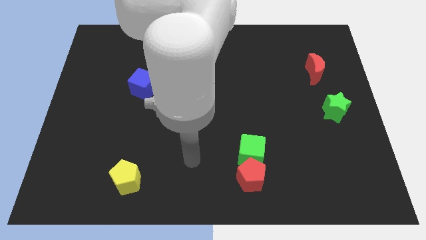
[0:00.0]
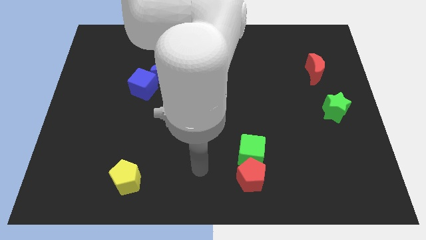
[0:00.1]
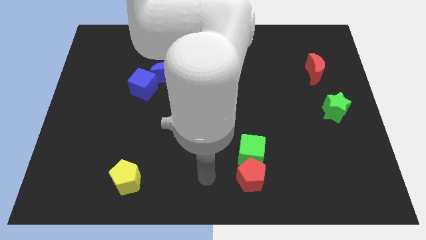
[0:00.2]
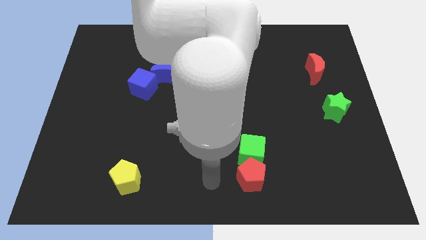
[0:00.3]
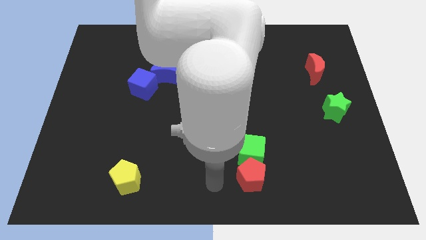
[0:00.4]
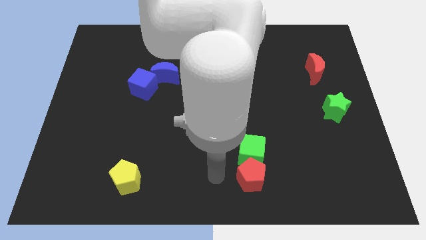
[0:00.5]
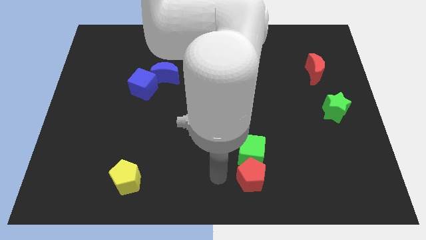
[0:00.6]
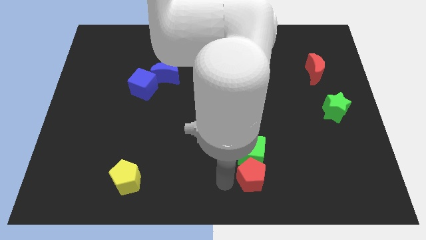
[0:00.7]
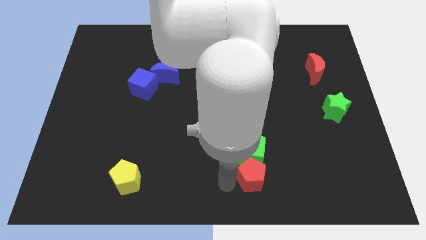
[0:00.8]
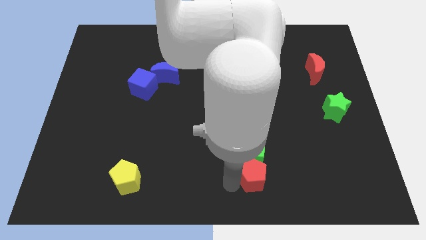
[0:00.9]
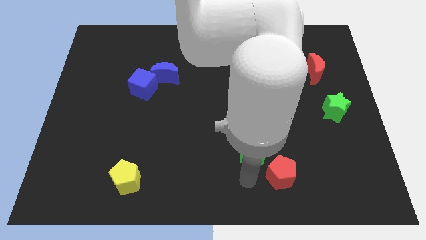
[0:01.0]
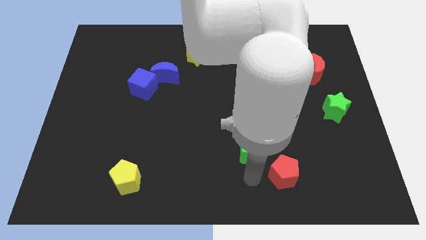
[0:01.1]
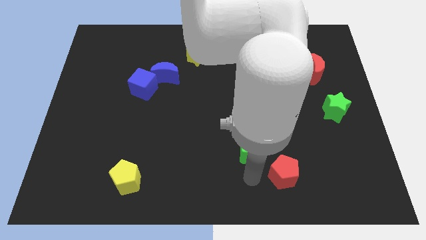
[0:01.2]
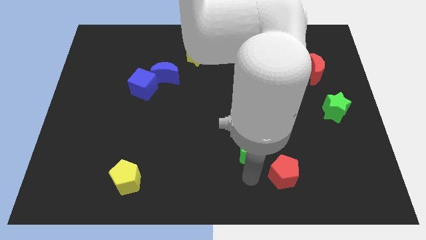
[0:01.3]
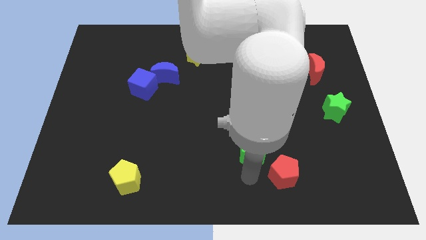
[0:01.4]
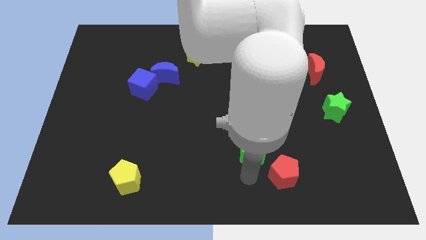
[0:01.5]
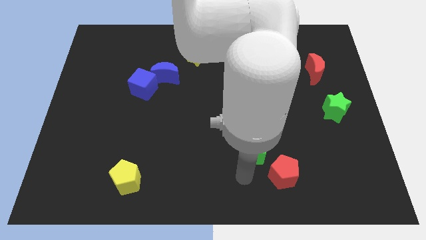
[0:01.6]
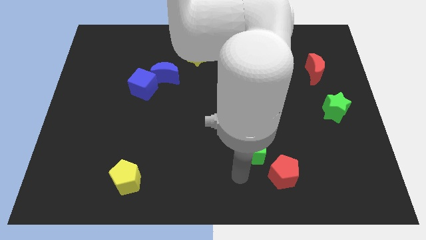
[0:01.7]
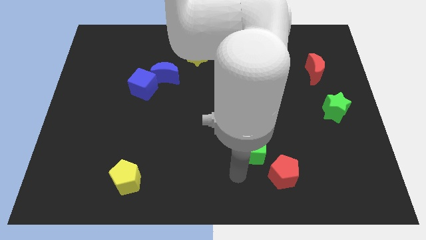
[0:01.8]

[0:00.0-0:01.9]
slightly push the red pentagon to the right

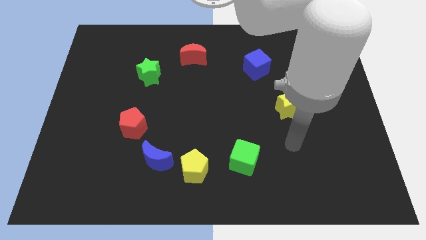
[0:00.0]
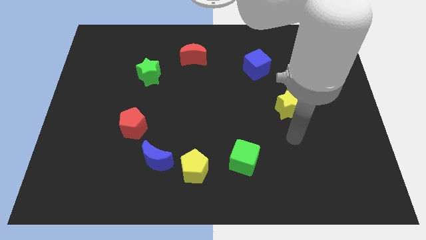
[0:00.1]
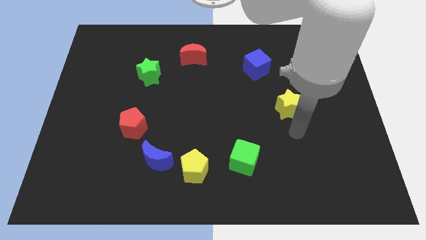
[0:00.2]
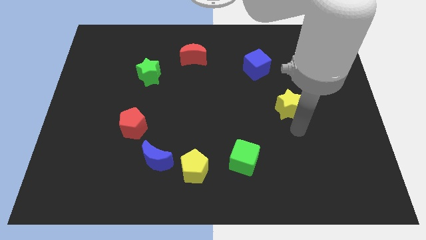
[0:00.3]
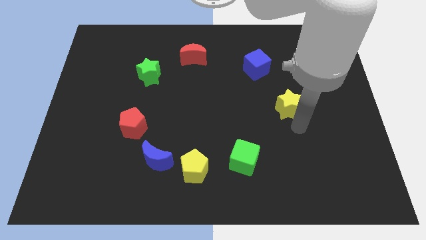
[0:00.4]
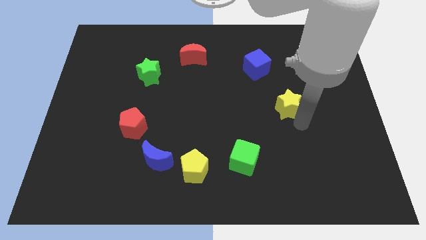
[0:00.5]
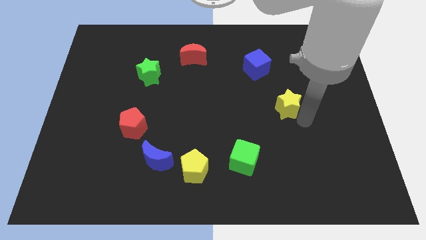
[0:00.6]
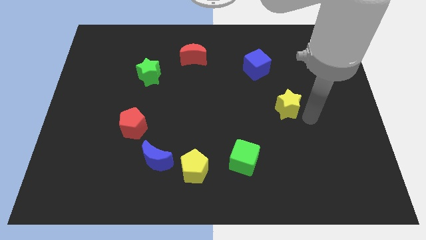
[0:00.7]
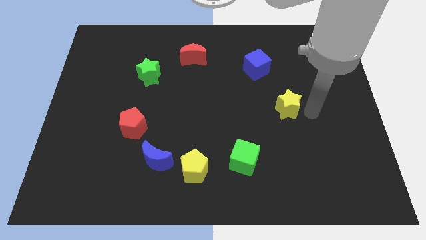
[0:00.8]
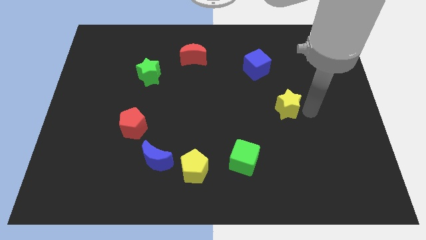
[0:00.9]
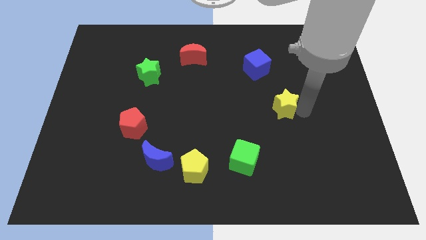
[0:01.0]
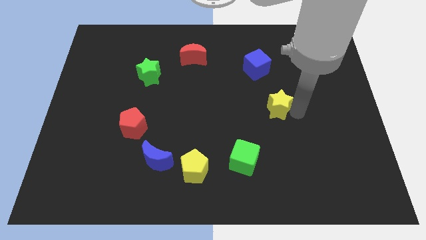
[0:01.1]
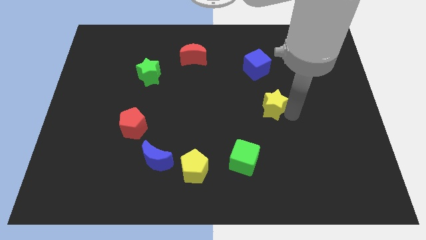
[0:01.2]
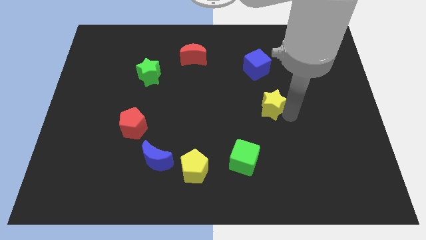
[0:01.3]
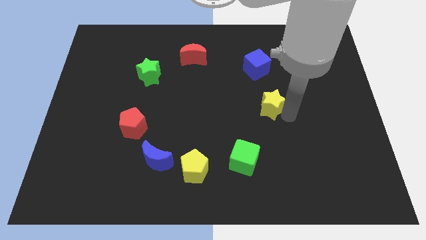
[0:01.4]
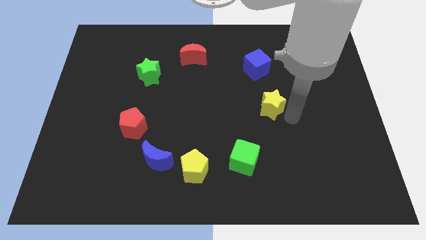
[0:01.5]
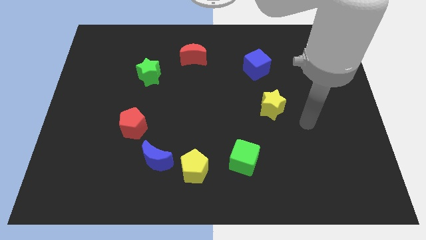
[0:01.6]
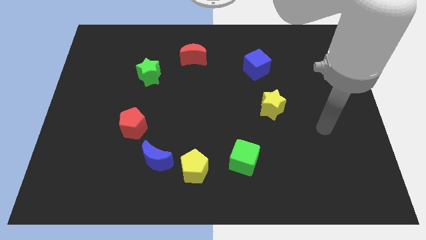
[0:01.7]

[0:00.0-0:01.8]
move the yellow star slightly to the left

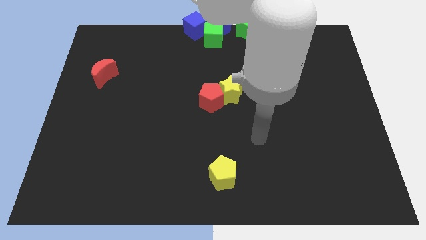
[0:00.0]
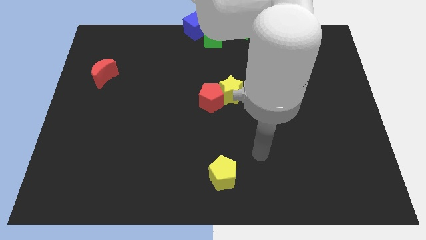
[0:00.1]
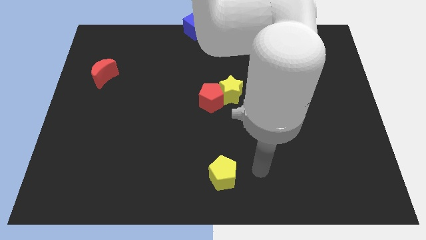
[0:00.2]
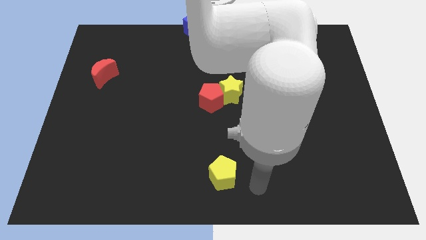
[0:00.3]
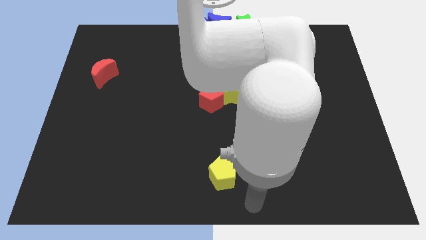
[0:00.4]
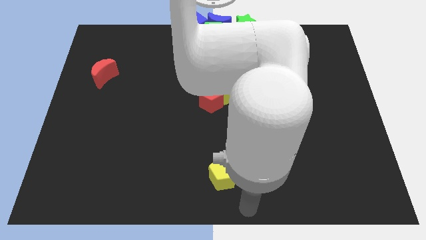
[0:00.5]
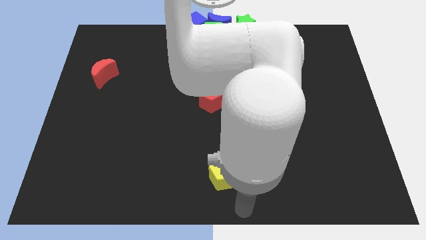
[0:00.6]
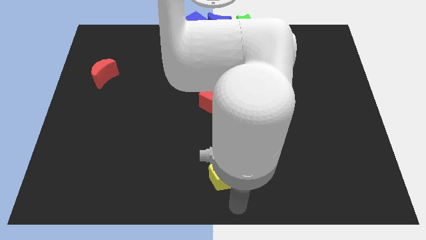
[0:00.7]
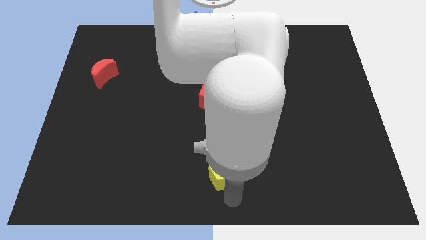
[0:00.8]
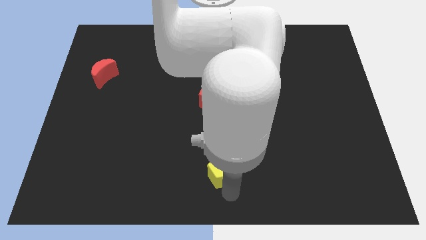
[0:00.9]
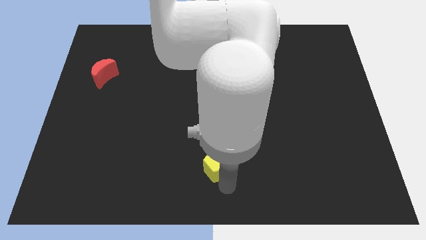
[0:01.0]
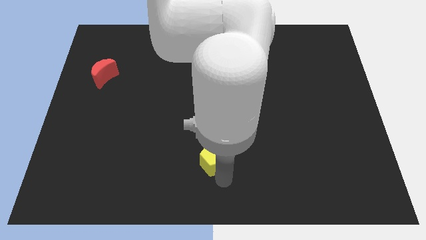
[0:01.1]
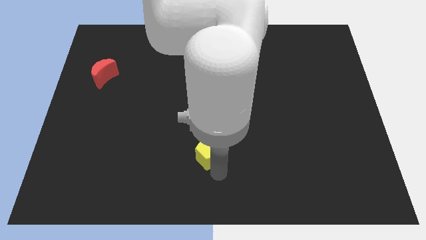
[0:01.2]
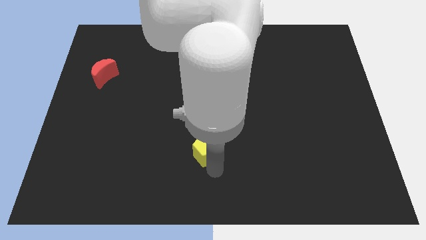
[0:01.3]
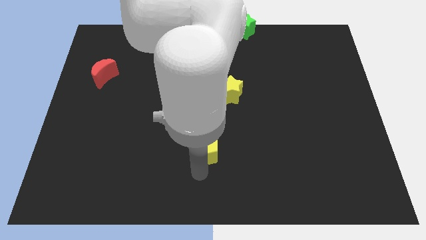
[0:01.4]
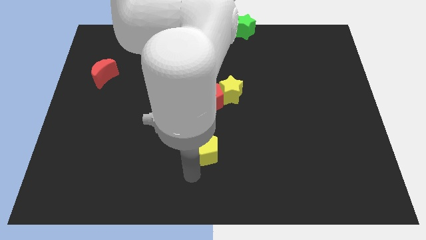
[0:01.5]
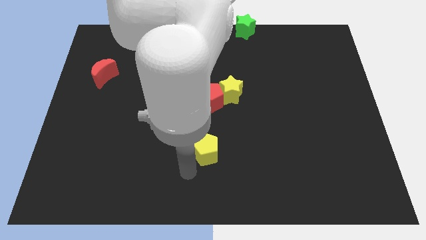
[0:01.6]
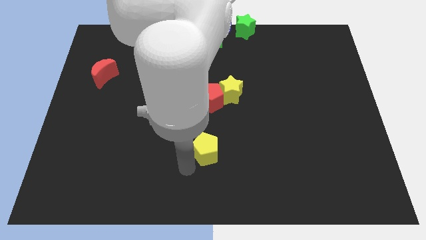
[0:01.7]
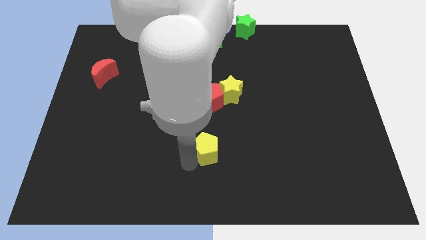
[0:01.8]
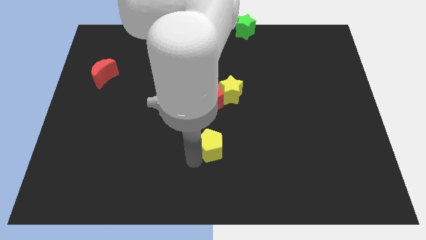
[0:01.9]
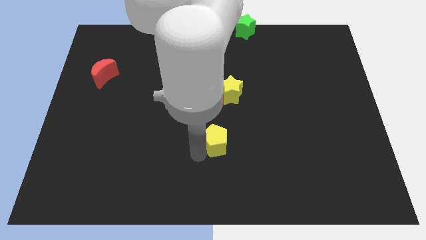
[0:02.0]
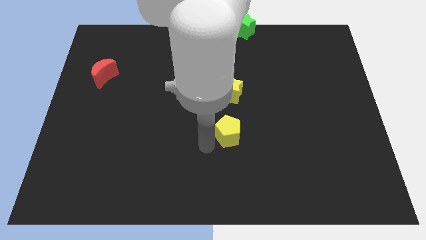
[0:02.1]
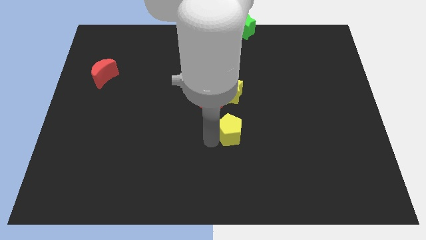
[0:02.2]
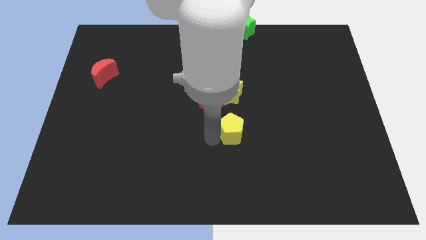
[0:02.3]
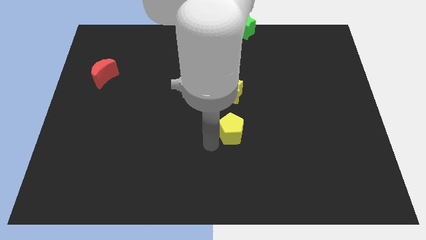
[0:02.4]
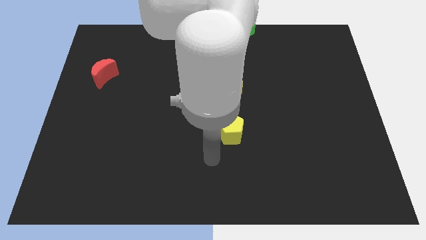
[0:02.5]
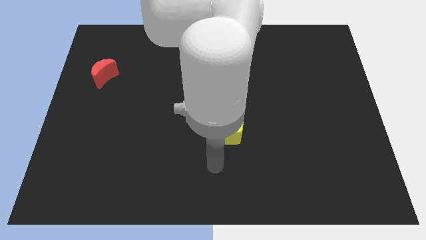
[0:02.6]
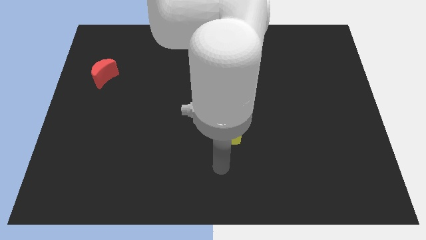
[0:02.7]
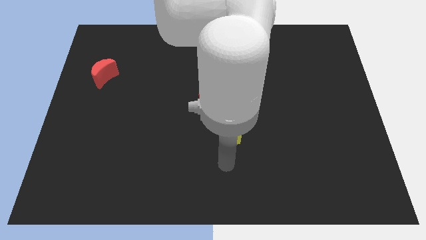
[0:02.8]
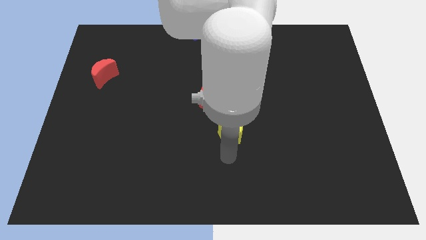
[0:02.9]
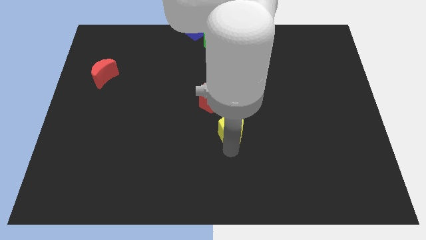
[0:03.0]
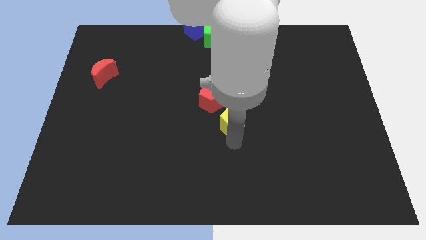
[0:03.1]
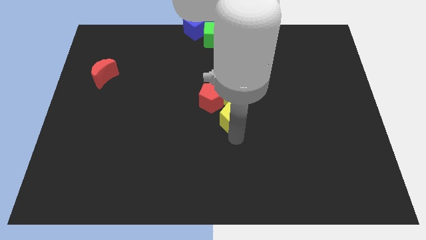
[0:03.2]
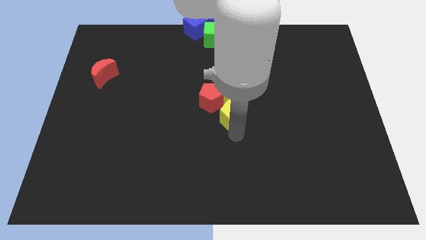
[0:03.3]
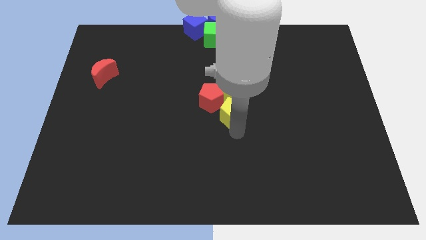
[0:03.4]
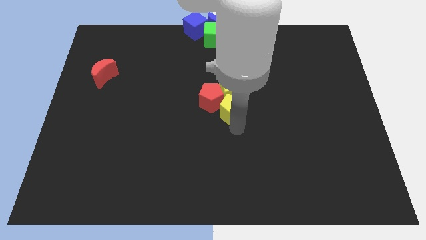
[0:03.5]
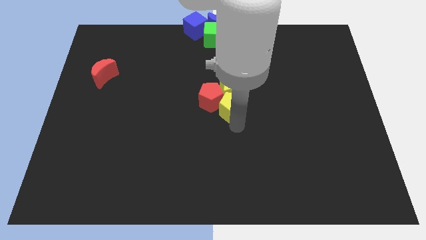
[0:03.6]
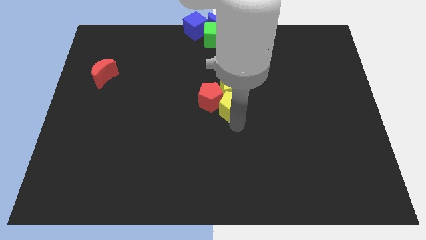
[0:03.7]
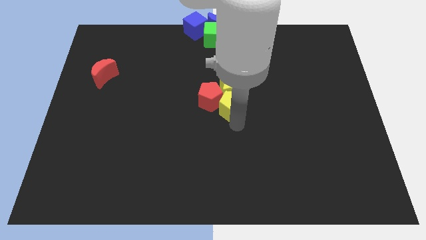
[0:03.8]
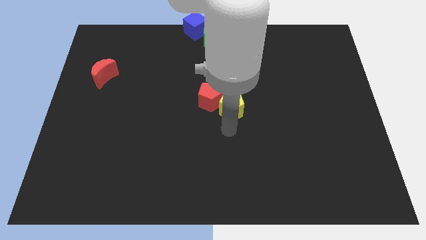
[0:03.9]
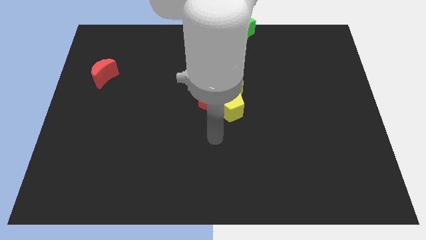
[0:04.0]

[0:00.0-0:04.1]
move the yellow pentagon to the bottom side of the yellow star

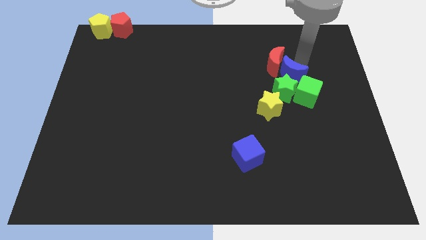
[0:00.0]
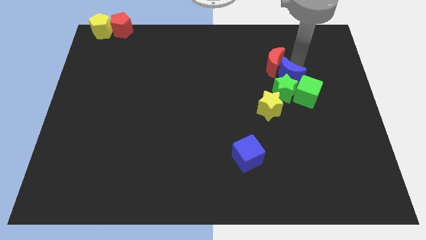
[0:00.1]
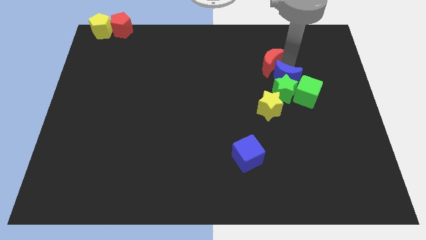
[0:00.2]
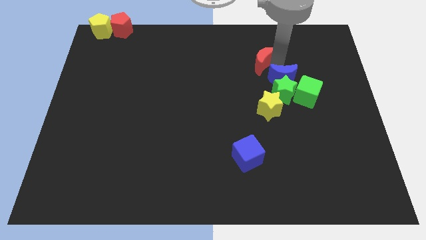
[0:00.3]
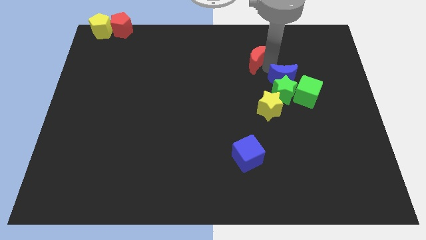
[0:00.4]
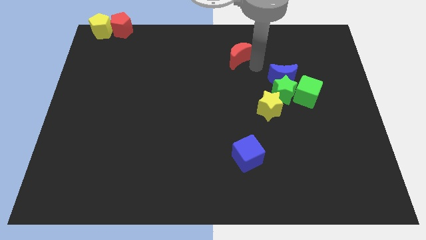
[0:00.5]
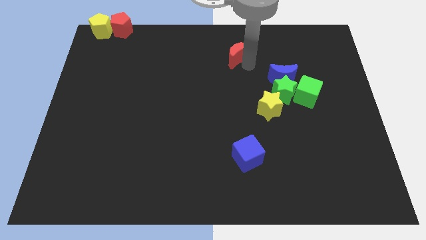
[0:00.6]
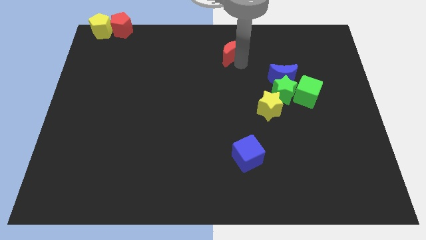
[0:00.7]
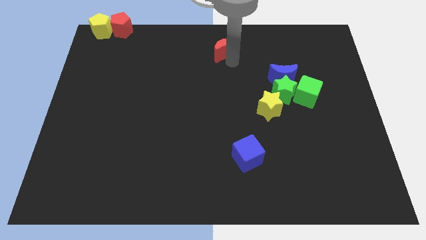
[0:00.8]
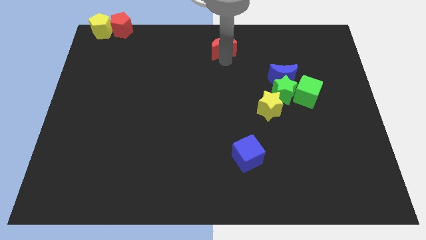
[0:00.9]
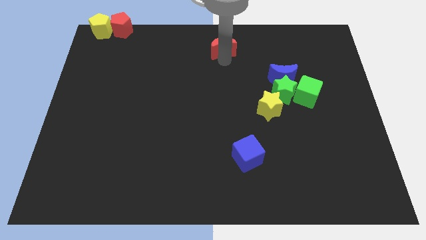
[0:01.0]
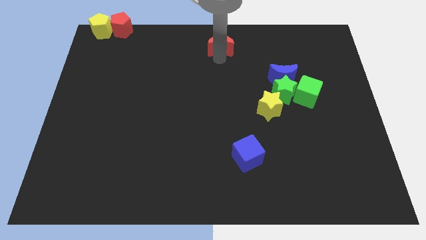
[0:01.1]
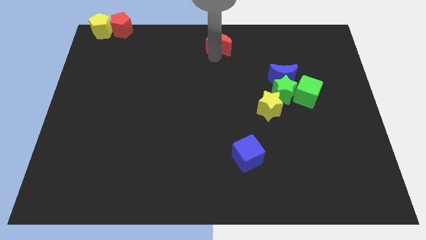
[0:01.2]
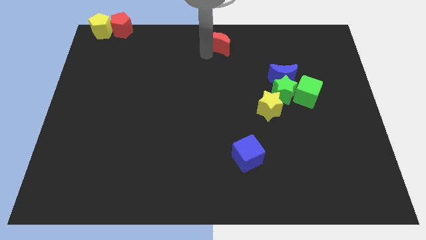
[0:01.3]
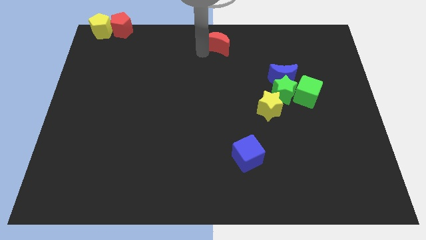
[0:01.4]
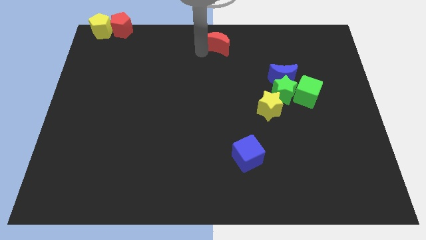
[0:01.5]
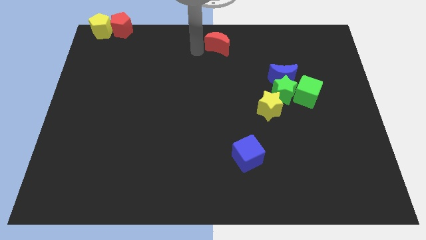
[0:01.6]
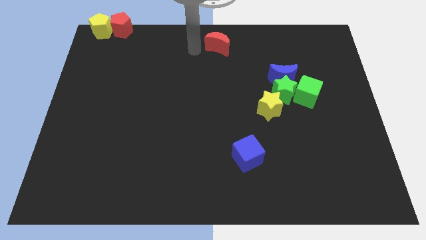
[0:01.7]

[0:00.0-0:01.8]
place red moon to the top center of the board
